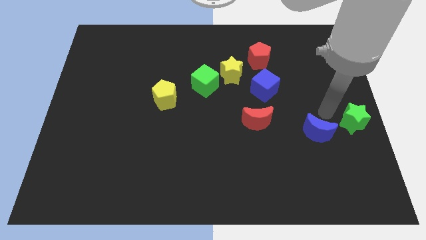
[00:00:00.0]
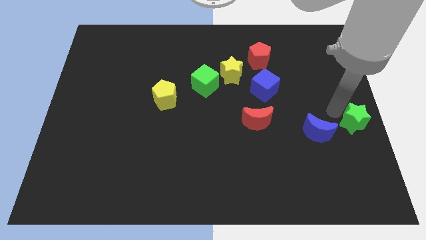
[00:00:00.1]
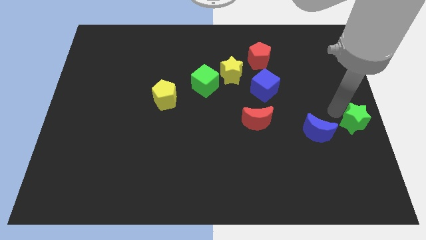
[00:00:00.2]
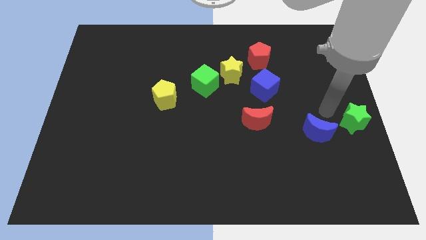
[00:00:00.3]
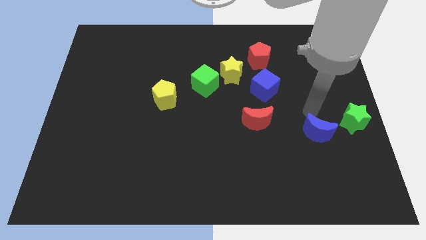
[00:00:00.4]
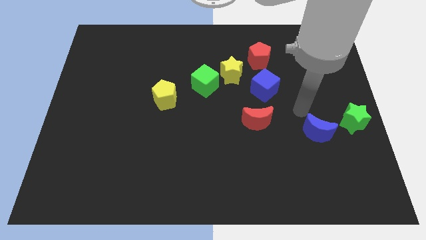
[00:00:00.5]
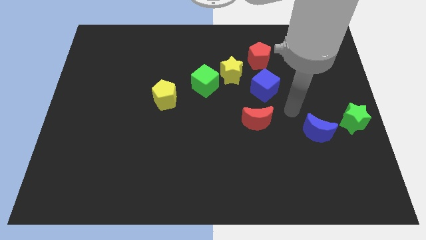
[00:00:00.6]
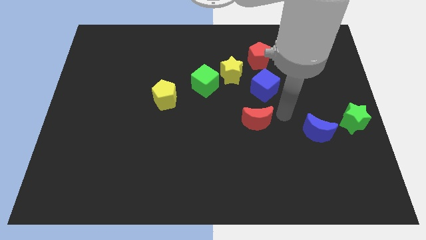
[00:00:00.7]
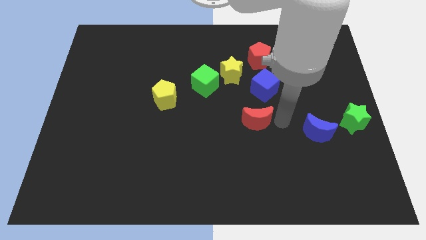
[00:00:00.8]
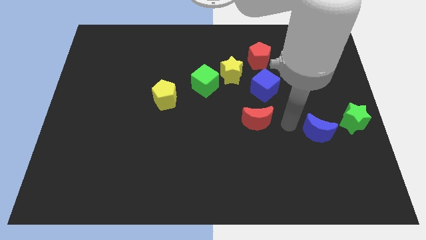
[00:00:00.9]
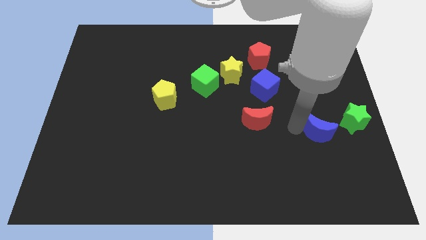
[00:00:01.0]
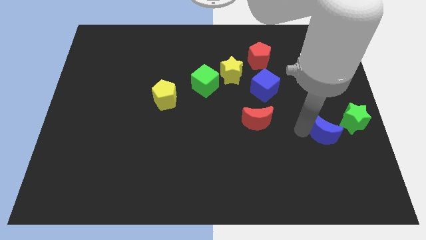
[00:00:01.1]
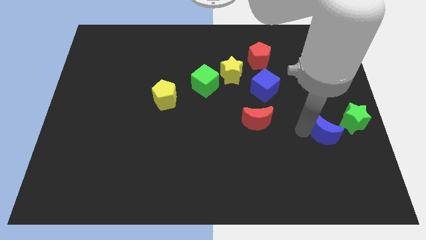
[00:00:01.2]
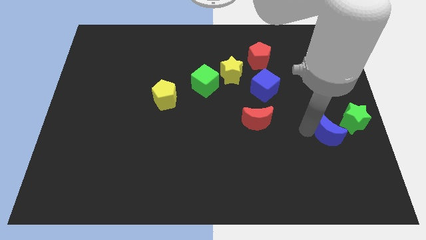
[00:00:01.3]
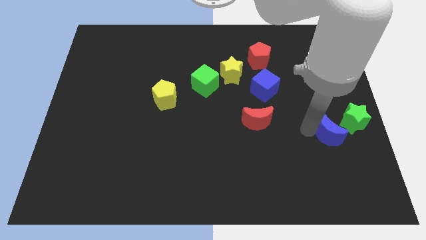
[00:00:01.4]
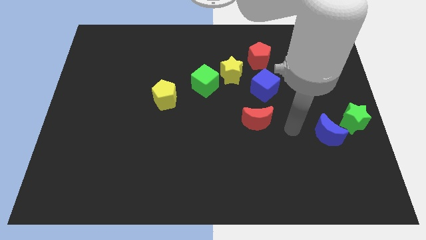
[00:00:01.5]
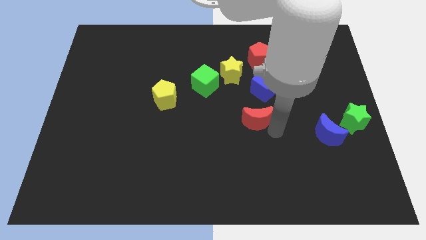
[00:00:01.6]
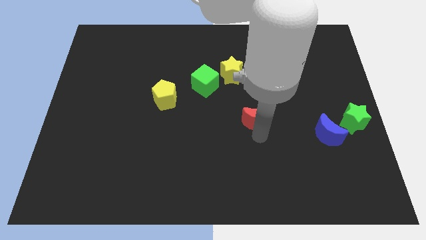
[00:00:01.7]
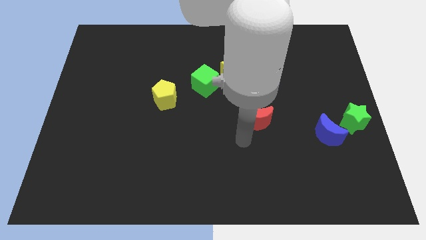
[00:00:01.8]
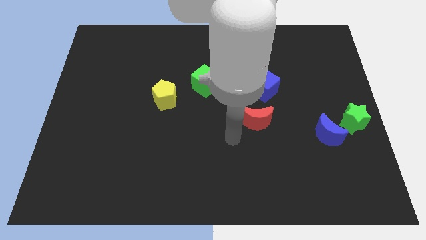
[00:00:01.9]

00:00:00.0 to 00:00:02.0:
move the blue moon slightly to the right

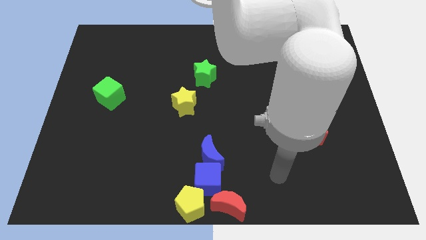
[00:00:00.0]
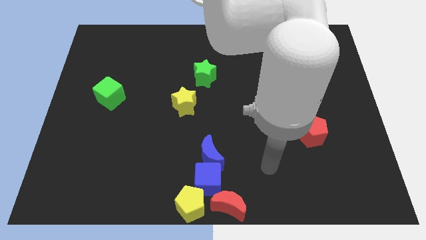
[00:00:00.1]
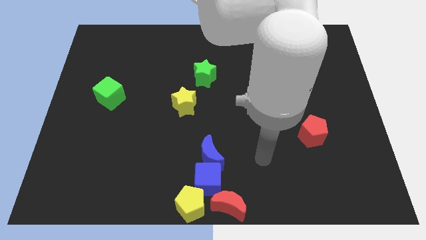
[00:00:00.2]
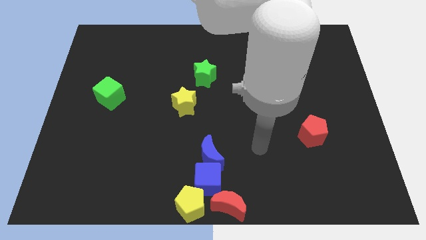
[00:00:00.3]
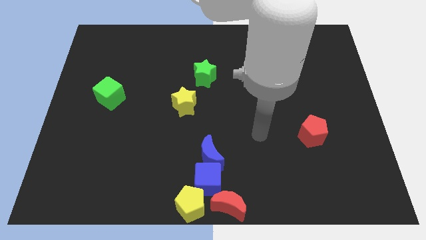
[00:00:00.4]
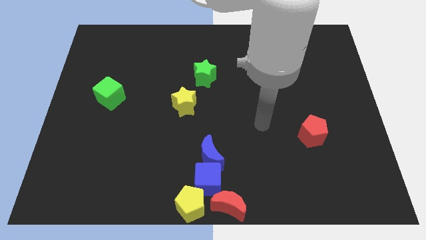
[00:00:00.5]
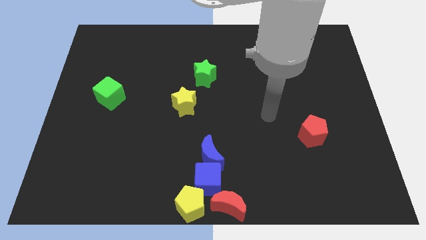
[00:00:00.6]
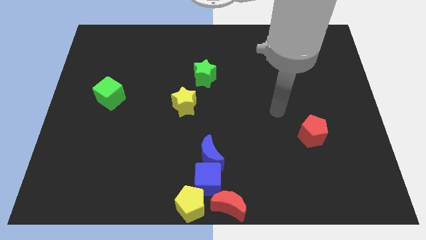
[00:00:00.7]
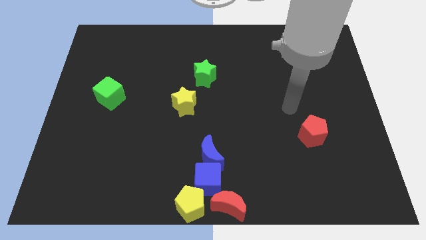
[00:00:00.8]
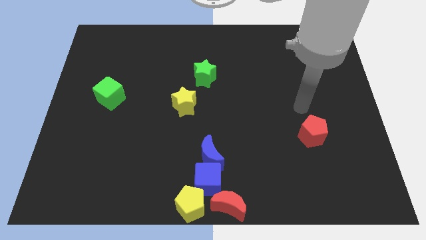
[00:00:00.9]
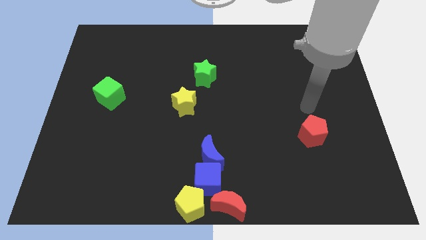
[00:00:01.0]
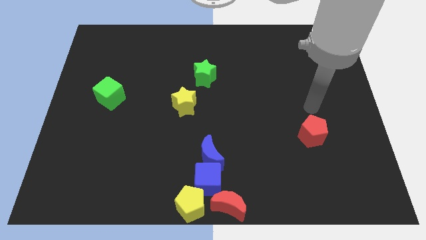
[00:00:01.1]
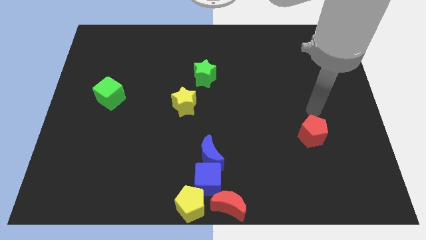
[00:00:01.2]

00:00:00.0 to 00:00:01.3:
point your arm above the red pentagon

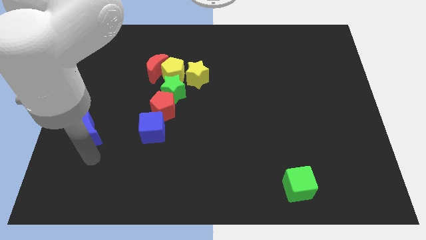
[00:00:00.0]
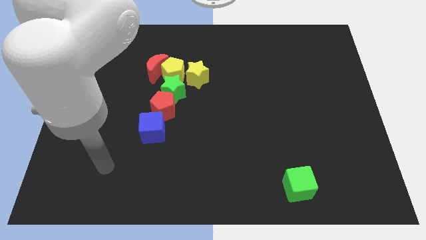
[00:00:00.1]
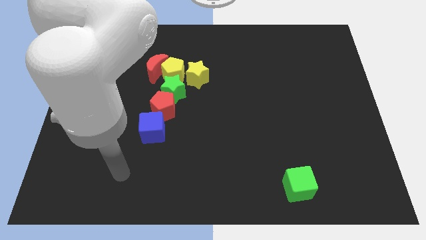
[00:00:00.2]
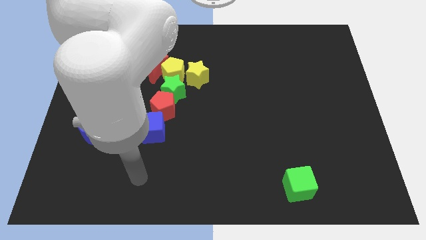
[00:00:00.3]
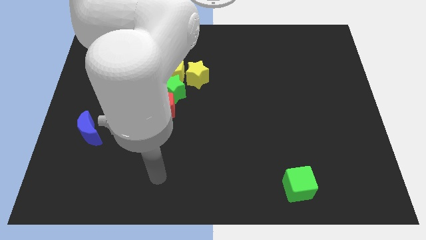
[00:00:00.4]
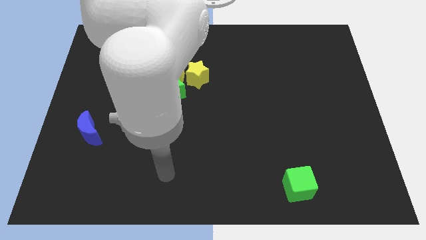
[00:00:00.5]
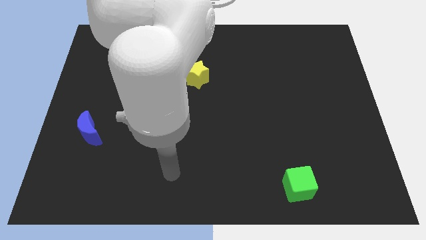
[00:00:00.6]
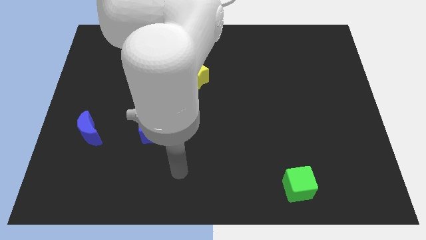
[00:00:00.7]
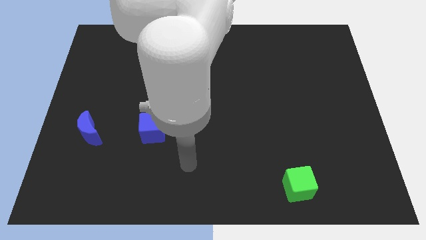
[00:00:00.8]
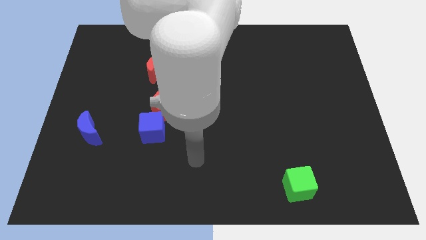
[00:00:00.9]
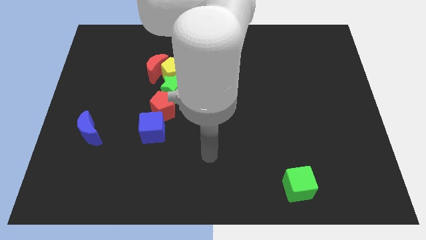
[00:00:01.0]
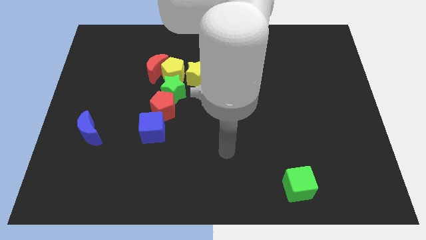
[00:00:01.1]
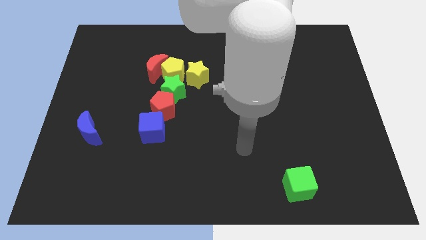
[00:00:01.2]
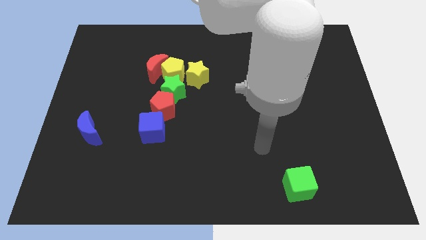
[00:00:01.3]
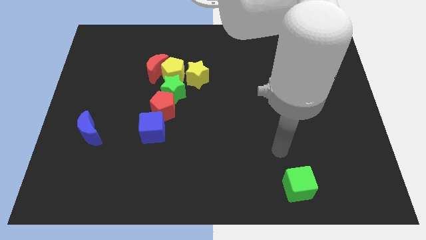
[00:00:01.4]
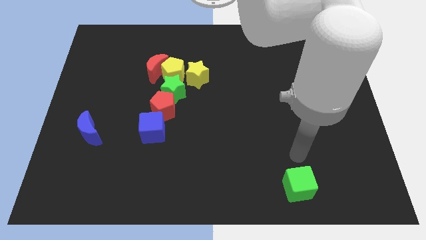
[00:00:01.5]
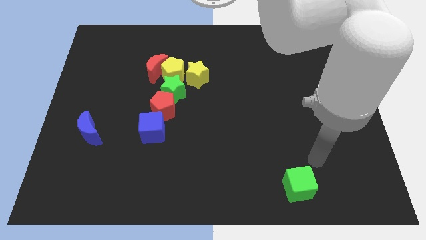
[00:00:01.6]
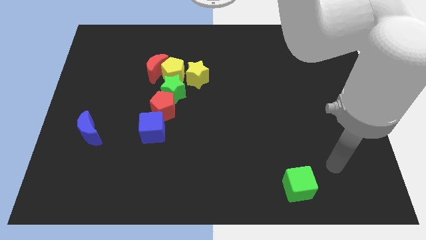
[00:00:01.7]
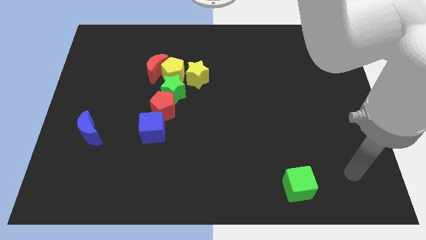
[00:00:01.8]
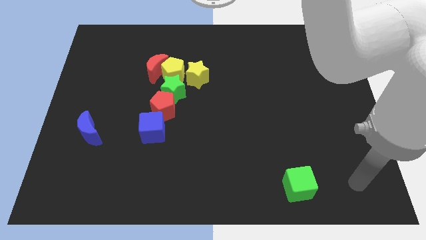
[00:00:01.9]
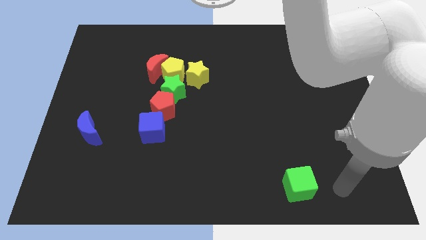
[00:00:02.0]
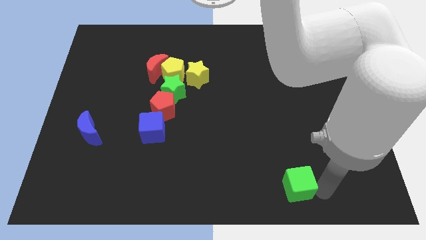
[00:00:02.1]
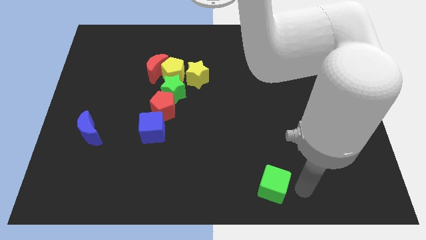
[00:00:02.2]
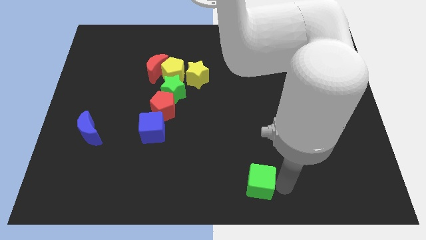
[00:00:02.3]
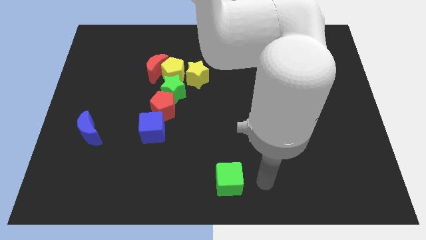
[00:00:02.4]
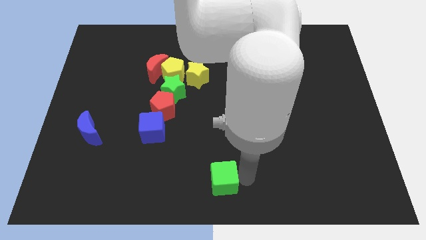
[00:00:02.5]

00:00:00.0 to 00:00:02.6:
push the green star to the bottom center of the board

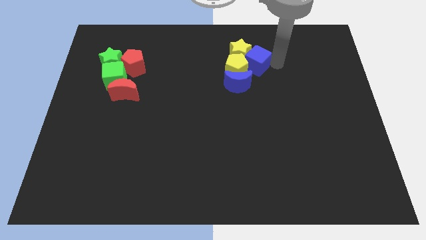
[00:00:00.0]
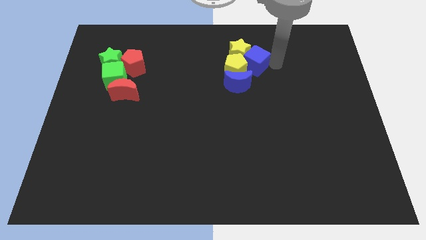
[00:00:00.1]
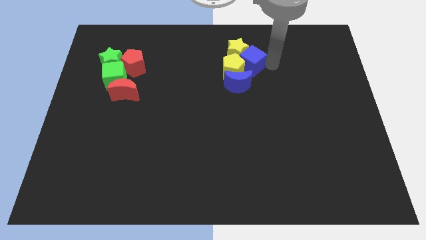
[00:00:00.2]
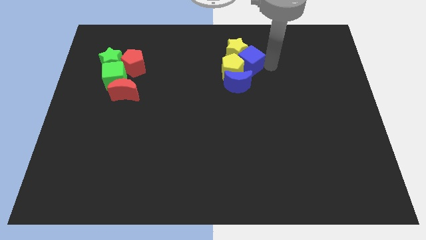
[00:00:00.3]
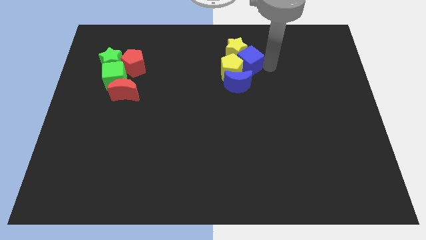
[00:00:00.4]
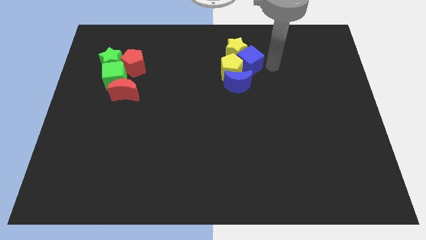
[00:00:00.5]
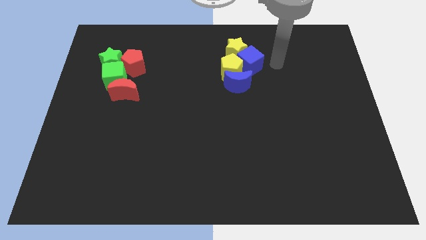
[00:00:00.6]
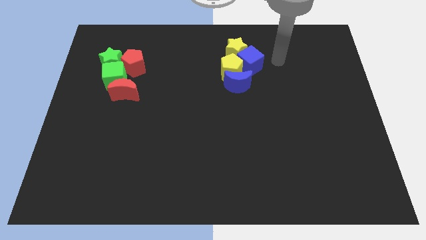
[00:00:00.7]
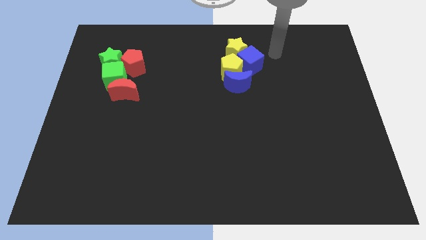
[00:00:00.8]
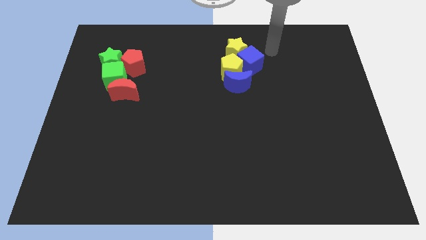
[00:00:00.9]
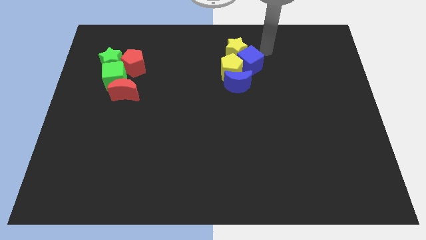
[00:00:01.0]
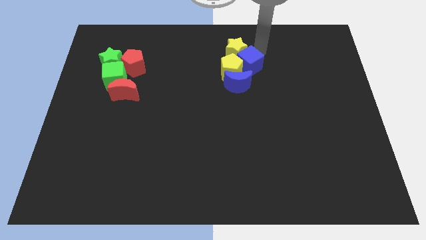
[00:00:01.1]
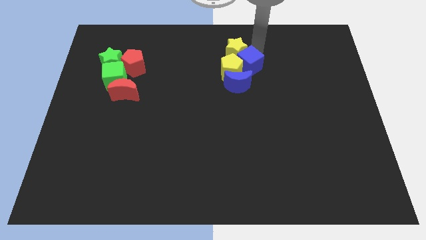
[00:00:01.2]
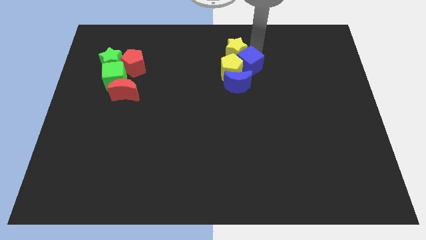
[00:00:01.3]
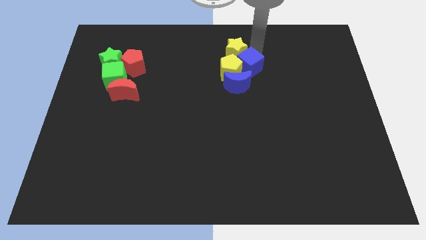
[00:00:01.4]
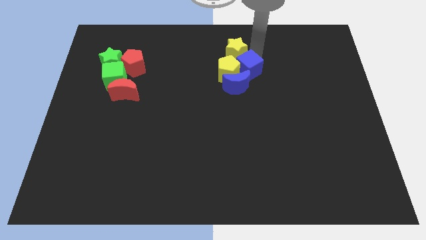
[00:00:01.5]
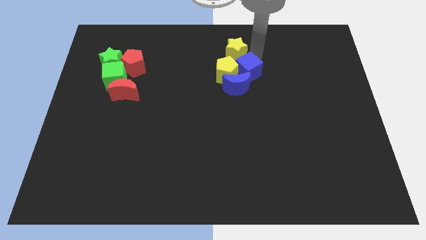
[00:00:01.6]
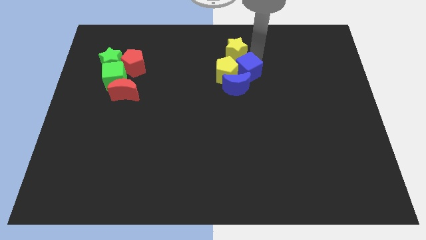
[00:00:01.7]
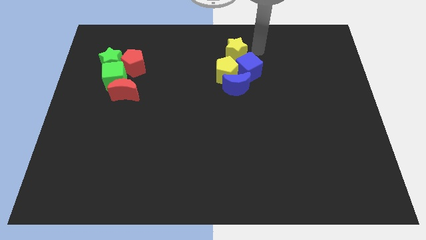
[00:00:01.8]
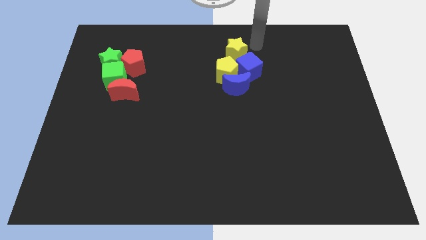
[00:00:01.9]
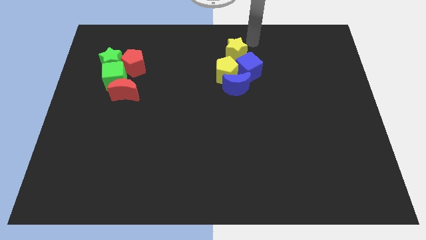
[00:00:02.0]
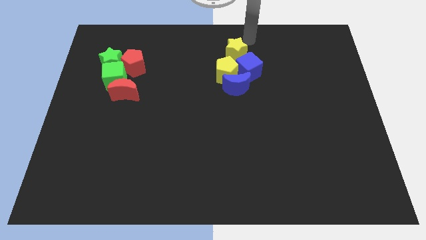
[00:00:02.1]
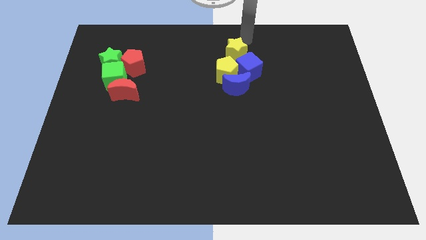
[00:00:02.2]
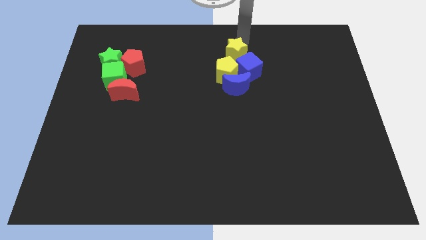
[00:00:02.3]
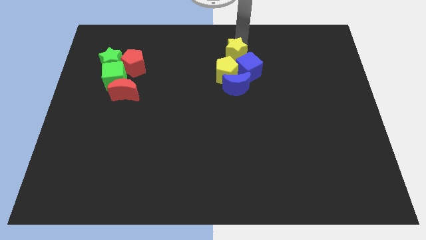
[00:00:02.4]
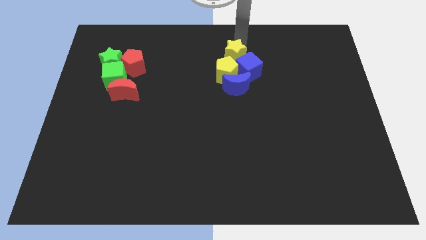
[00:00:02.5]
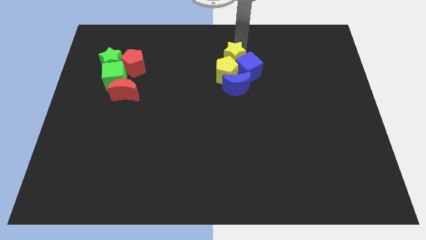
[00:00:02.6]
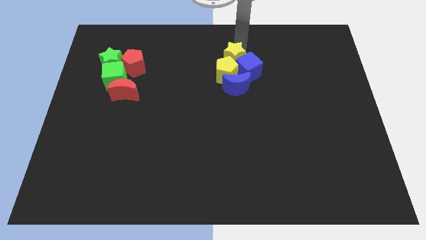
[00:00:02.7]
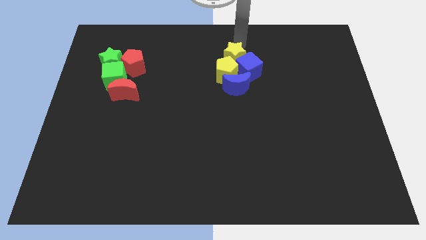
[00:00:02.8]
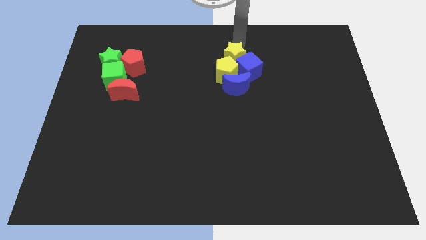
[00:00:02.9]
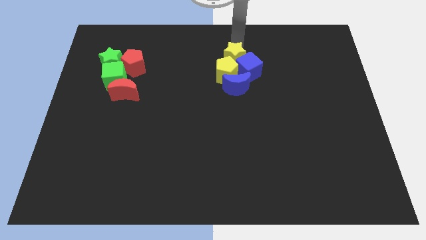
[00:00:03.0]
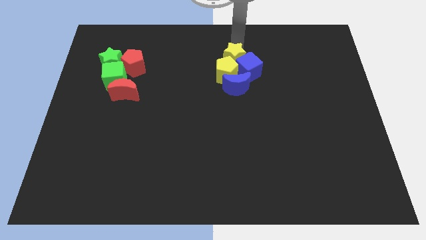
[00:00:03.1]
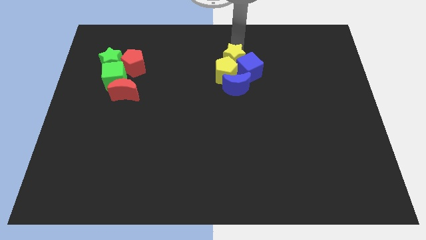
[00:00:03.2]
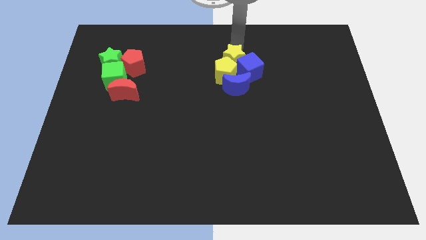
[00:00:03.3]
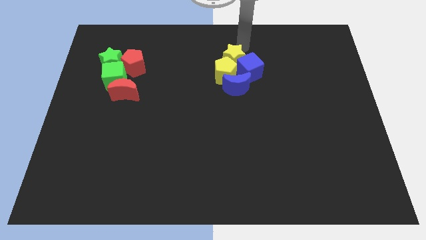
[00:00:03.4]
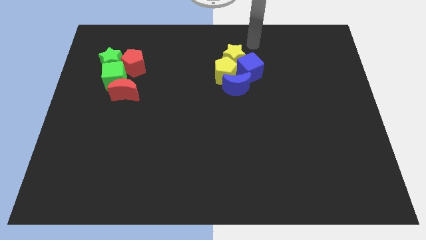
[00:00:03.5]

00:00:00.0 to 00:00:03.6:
tap the yellow star and yellow pentagon with the blue block
